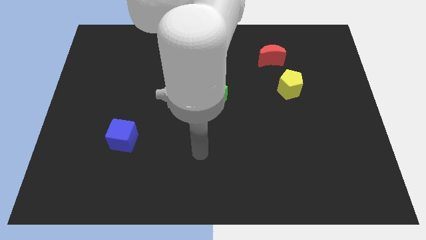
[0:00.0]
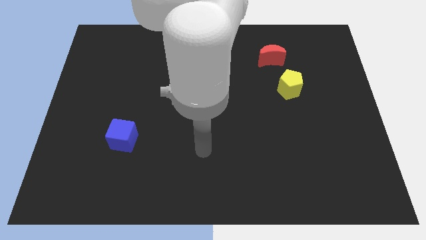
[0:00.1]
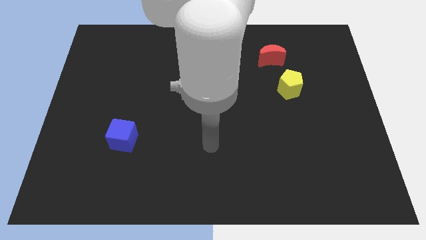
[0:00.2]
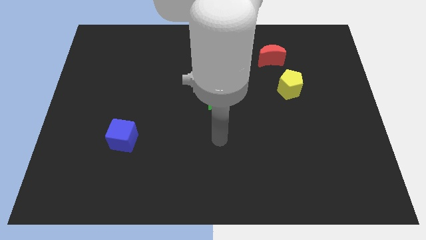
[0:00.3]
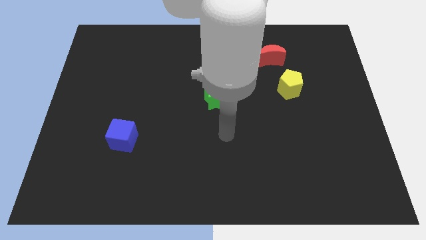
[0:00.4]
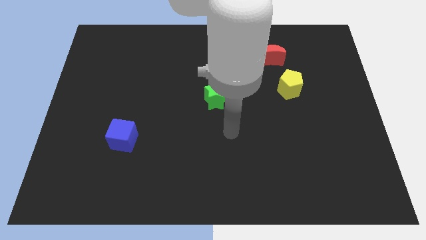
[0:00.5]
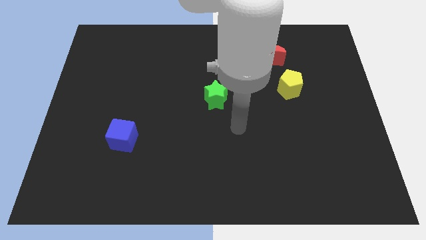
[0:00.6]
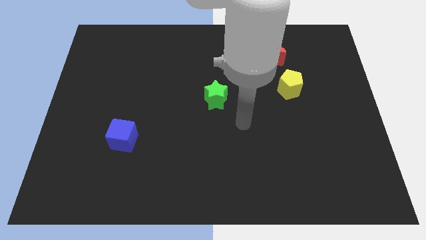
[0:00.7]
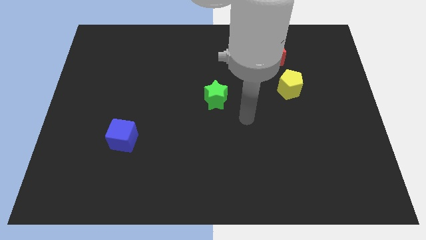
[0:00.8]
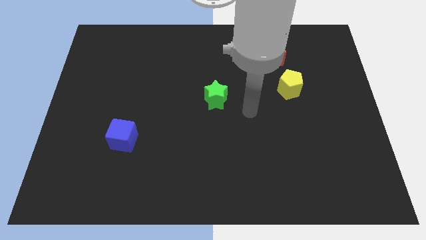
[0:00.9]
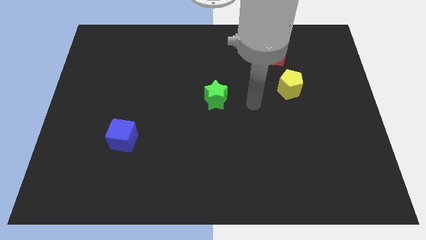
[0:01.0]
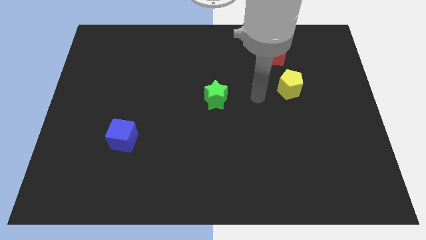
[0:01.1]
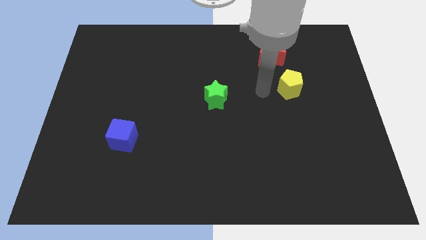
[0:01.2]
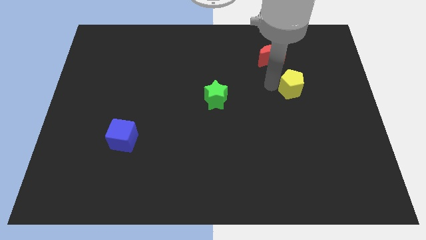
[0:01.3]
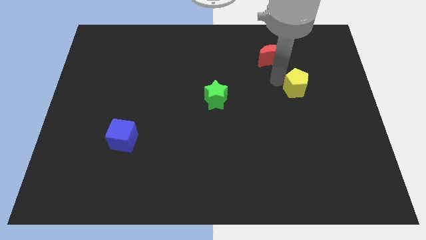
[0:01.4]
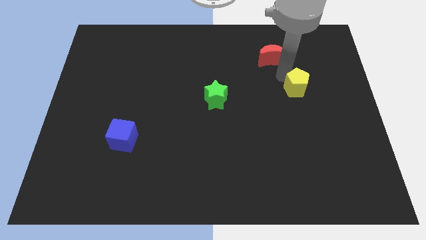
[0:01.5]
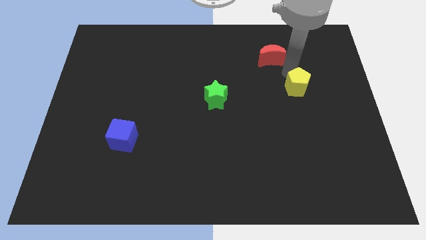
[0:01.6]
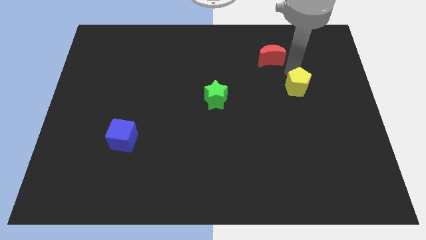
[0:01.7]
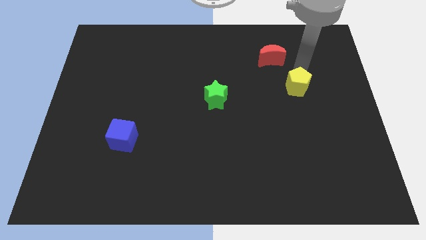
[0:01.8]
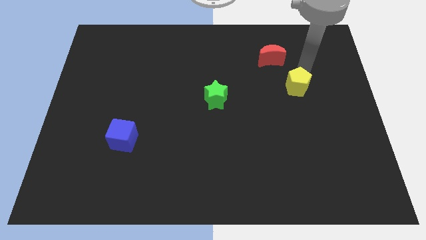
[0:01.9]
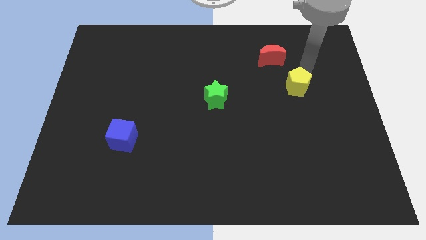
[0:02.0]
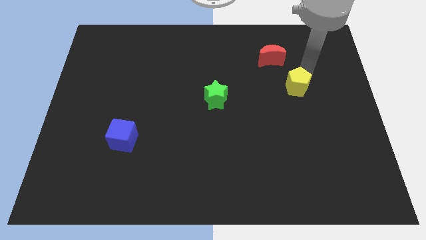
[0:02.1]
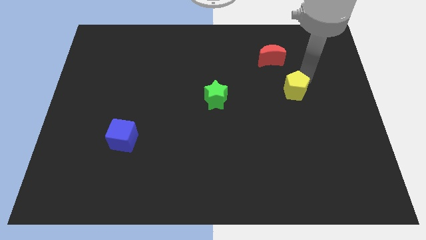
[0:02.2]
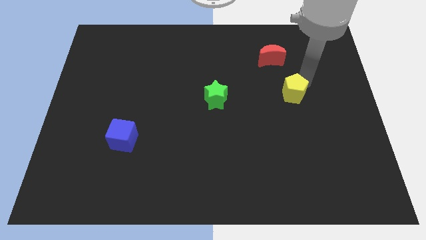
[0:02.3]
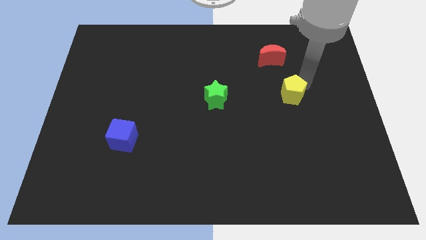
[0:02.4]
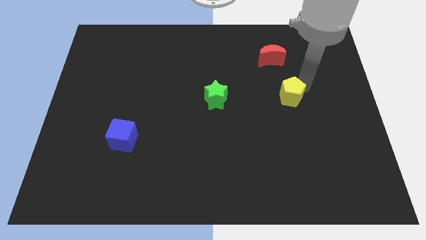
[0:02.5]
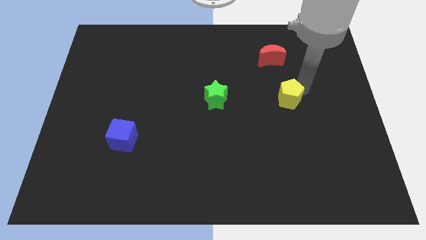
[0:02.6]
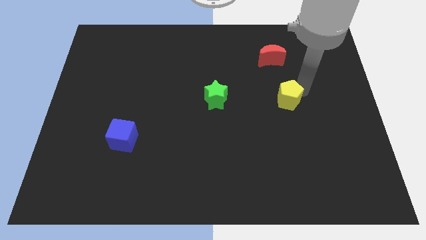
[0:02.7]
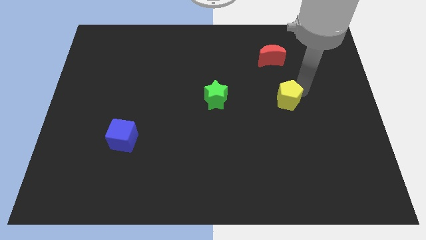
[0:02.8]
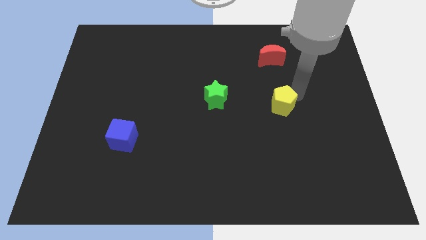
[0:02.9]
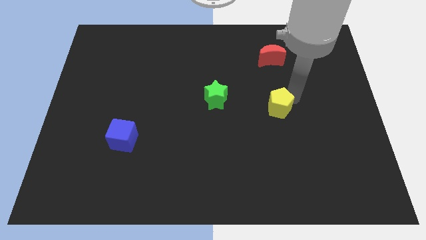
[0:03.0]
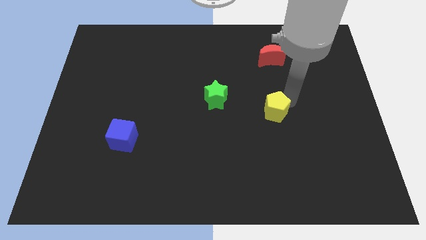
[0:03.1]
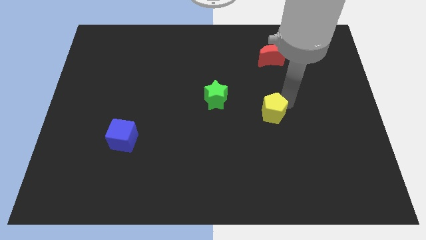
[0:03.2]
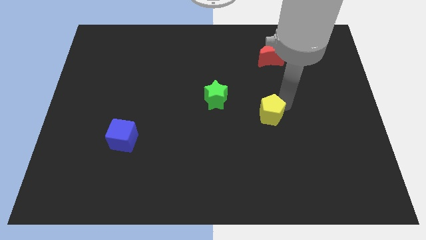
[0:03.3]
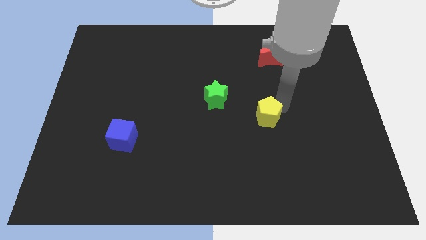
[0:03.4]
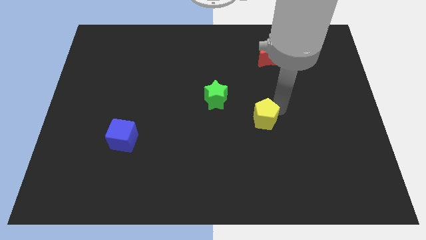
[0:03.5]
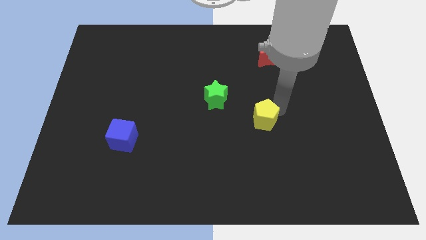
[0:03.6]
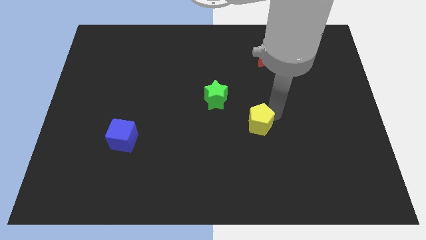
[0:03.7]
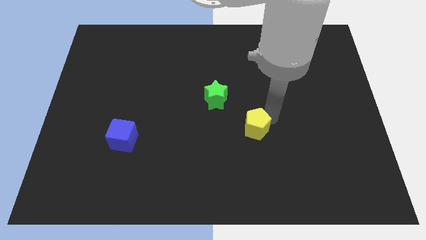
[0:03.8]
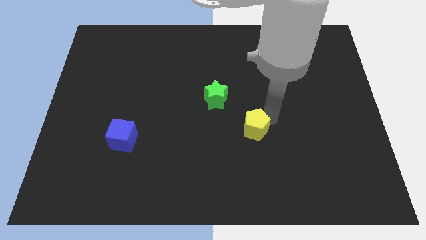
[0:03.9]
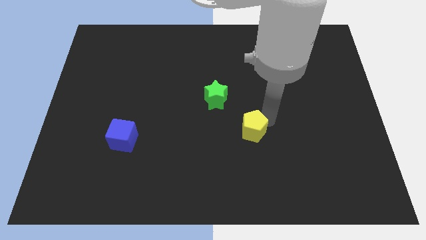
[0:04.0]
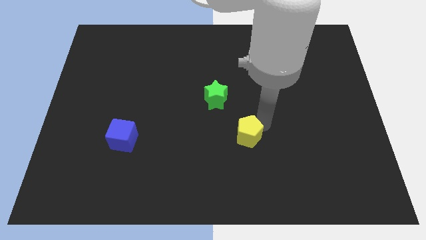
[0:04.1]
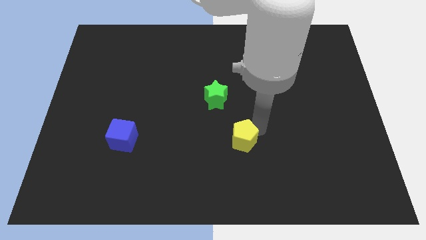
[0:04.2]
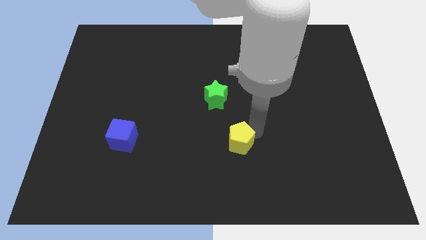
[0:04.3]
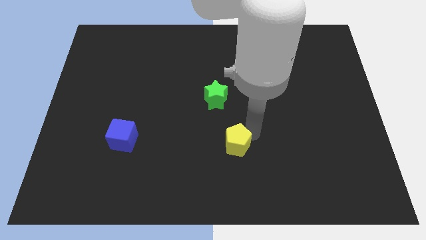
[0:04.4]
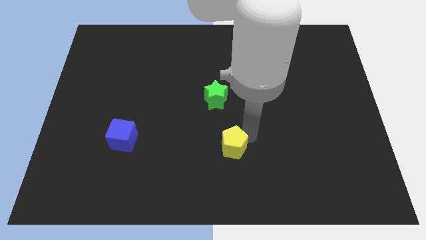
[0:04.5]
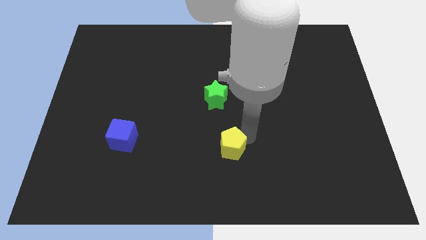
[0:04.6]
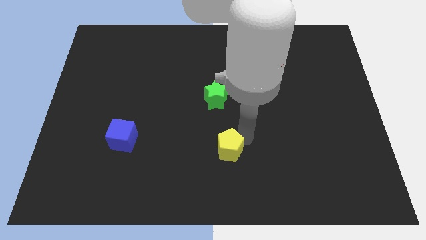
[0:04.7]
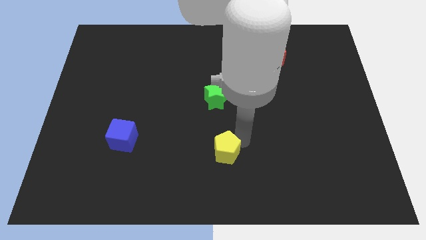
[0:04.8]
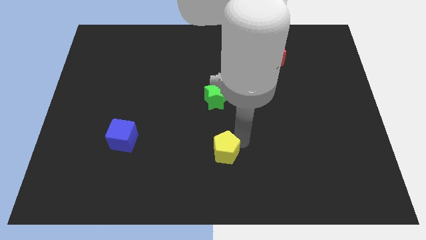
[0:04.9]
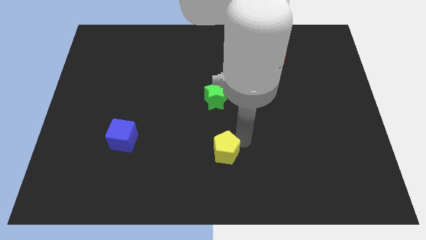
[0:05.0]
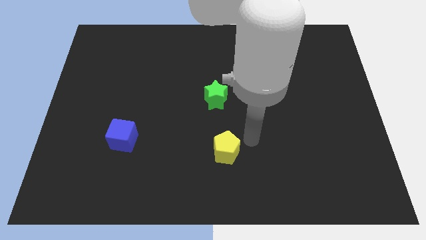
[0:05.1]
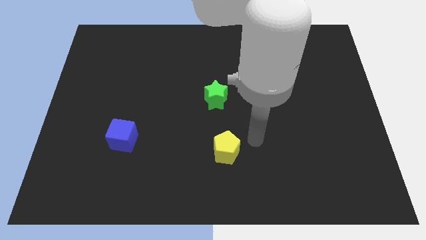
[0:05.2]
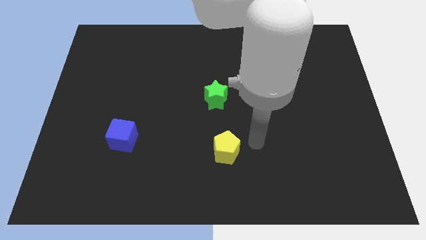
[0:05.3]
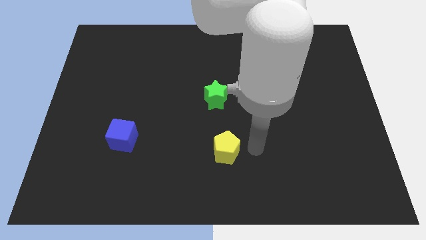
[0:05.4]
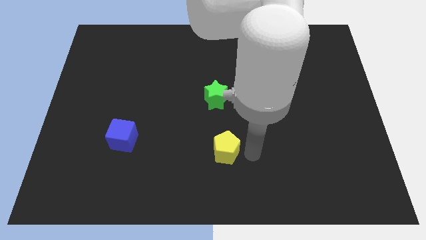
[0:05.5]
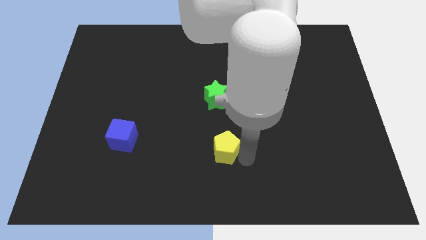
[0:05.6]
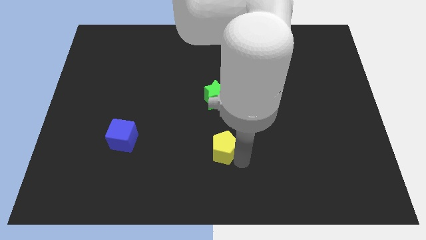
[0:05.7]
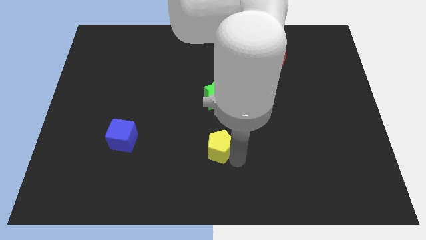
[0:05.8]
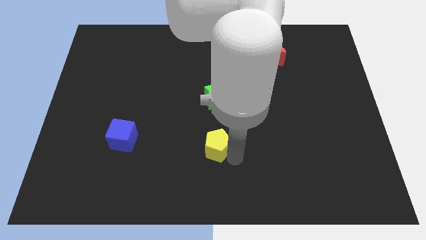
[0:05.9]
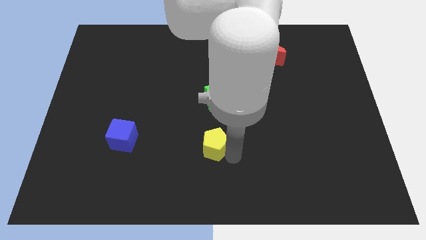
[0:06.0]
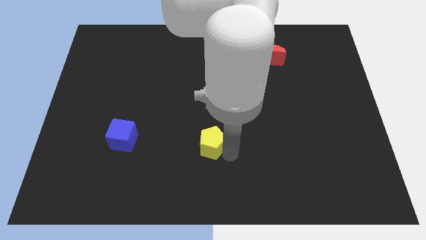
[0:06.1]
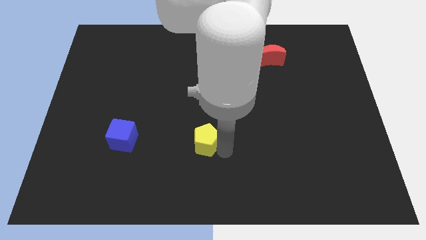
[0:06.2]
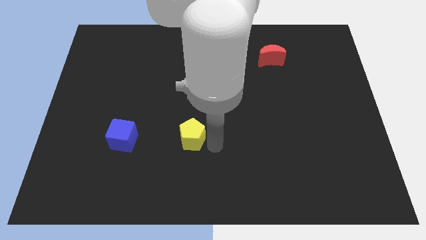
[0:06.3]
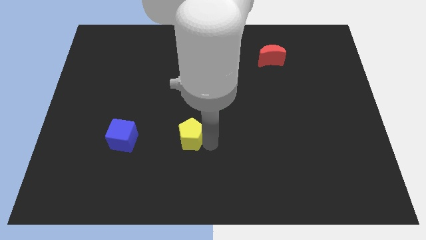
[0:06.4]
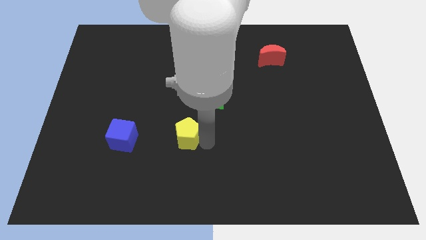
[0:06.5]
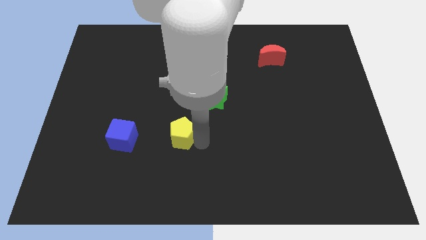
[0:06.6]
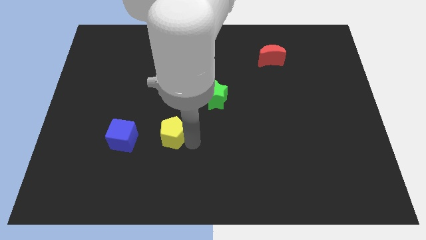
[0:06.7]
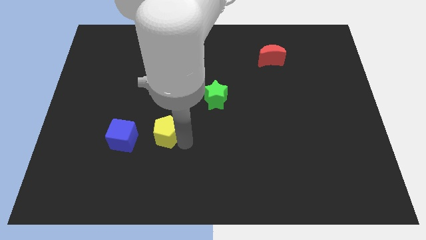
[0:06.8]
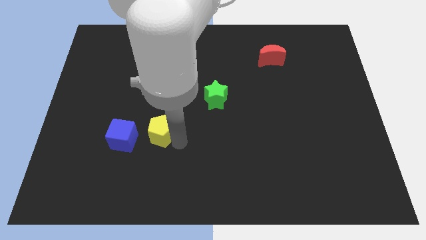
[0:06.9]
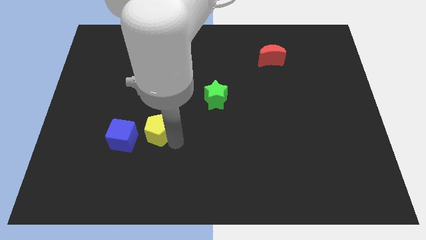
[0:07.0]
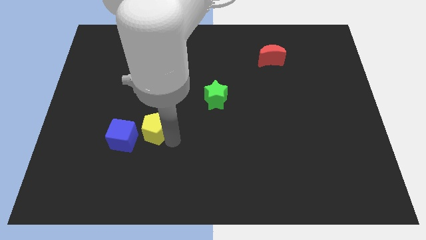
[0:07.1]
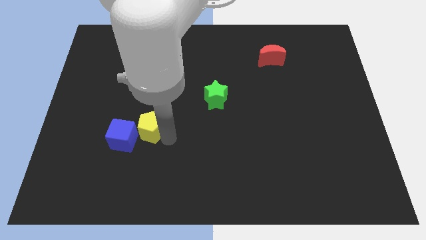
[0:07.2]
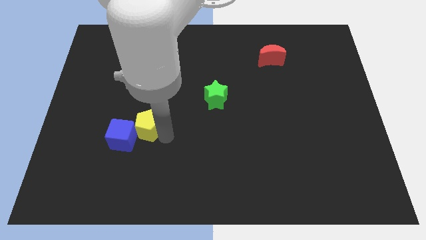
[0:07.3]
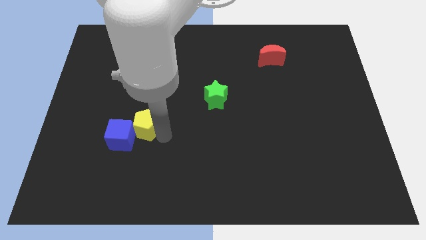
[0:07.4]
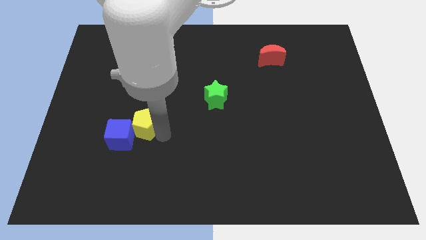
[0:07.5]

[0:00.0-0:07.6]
slide the pentagon next to the blue block

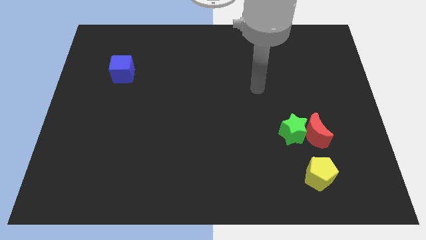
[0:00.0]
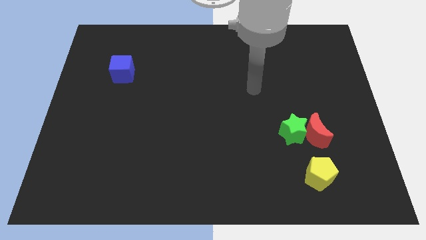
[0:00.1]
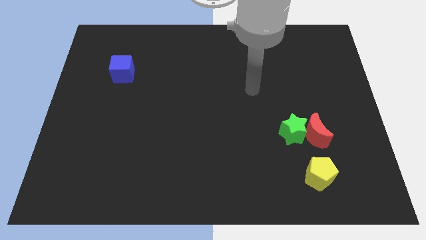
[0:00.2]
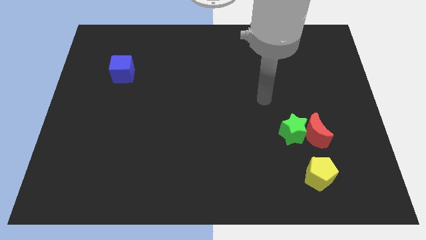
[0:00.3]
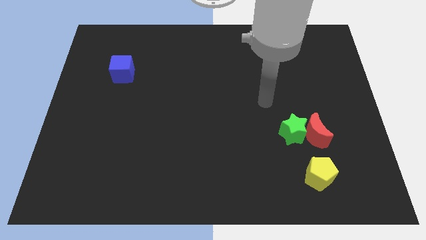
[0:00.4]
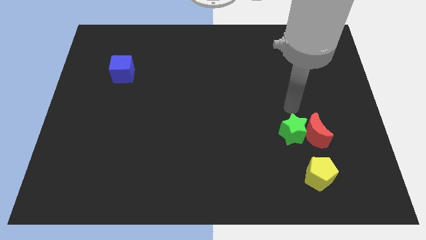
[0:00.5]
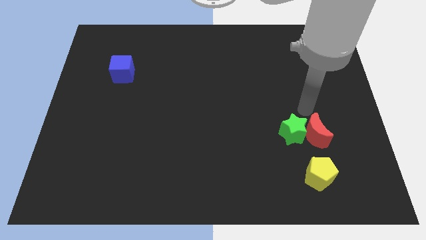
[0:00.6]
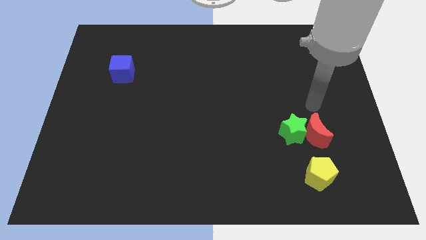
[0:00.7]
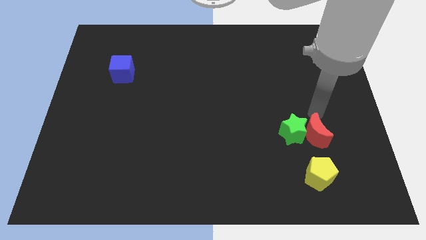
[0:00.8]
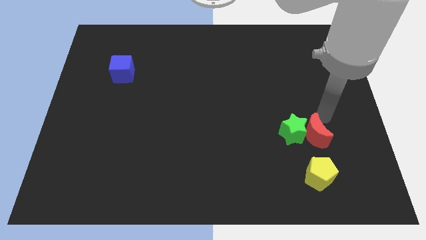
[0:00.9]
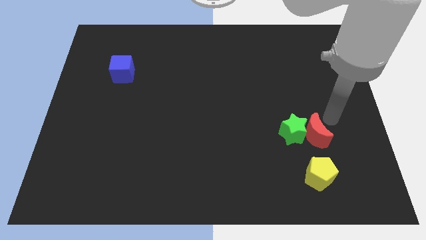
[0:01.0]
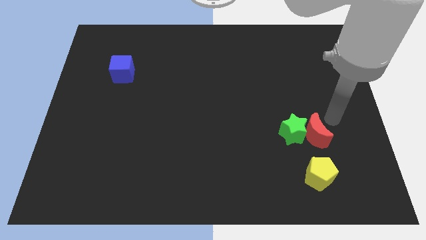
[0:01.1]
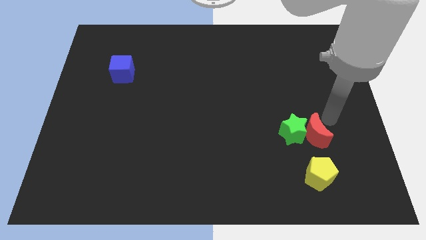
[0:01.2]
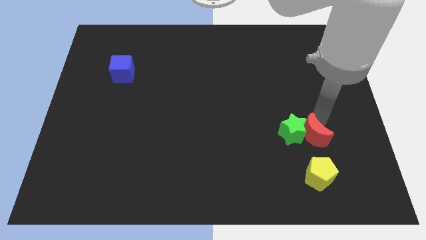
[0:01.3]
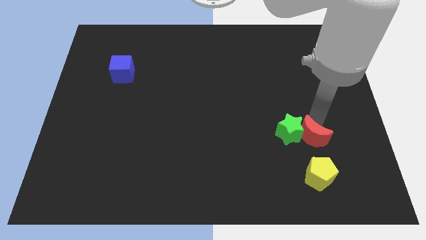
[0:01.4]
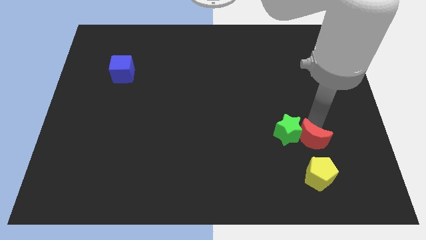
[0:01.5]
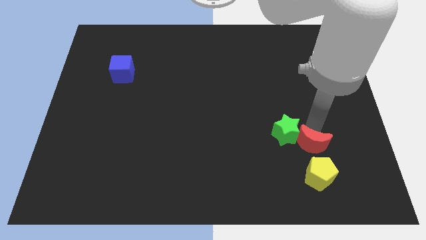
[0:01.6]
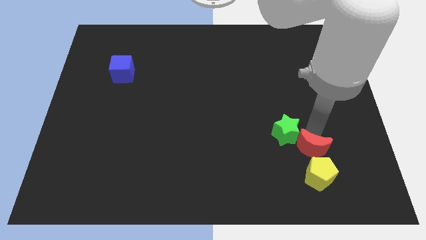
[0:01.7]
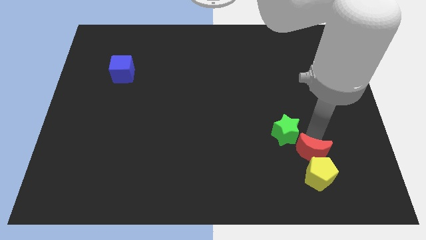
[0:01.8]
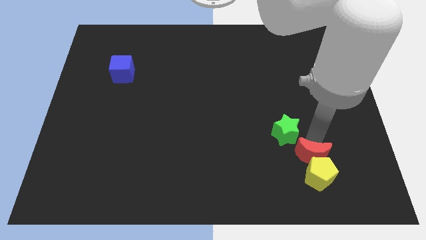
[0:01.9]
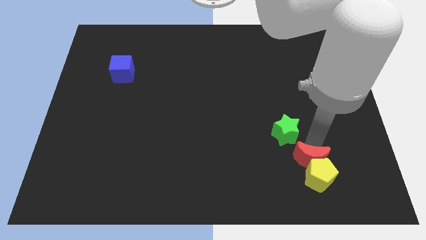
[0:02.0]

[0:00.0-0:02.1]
push the moon towards the pentagon
